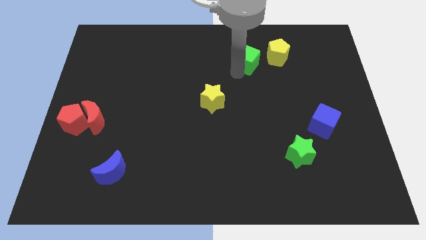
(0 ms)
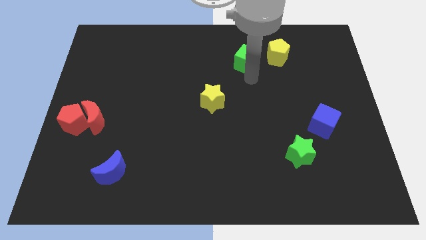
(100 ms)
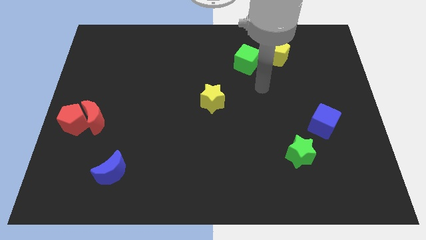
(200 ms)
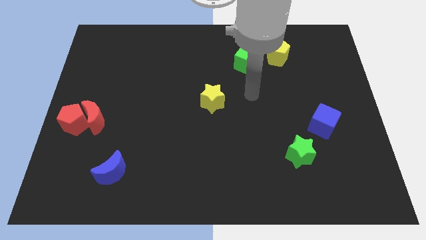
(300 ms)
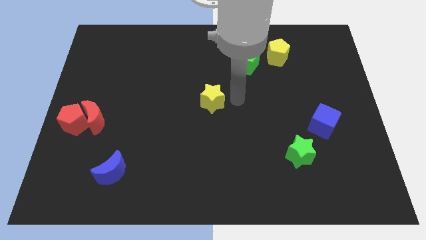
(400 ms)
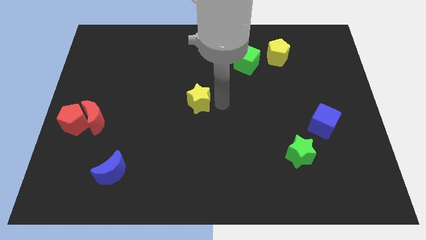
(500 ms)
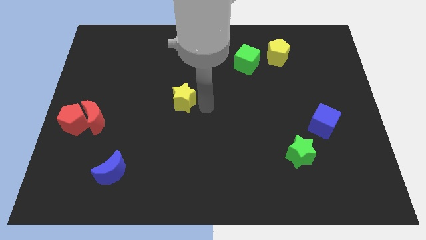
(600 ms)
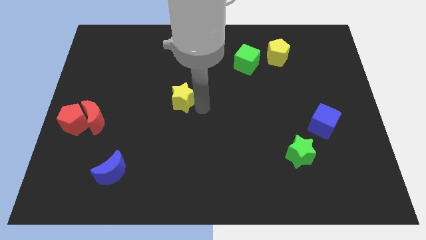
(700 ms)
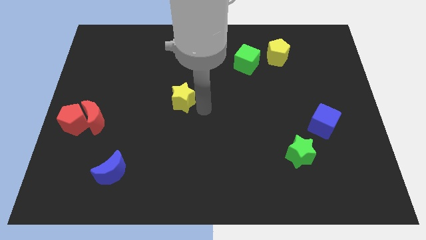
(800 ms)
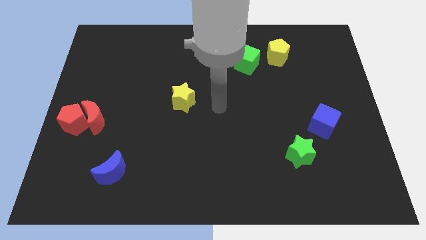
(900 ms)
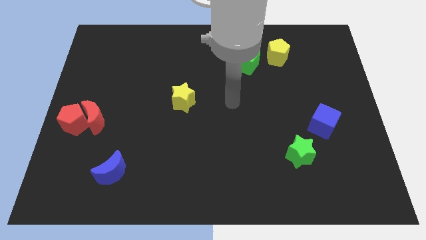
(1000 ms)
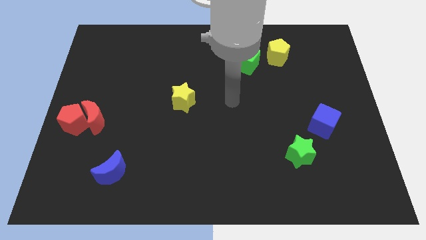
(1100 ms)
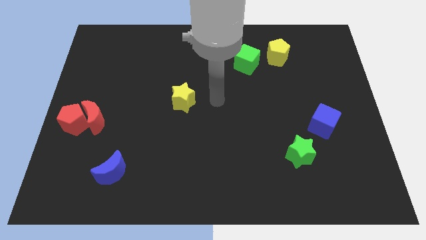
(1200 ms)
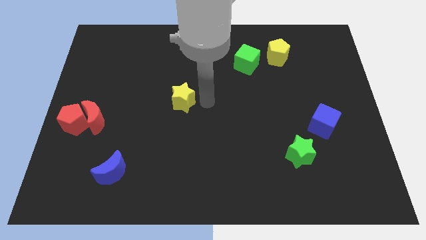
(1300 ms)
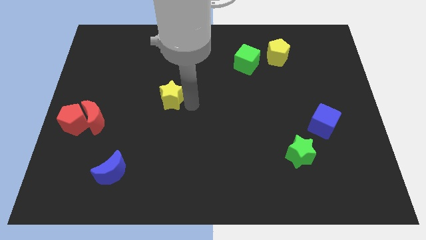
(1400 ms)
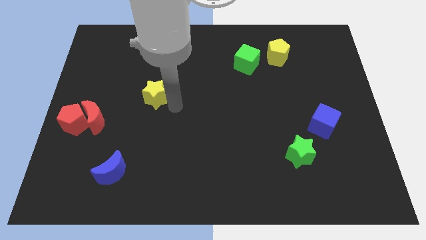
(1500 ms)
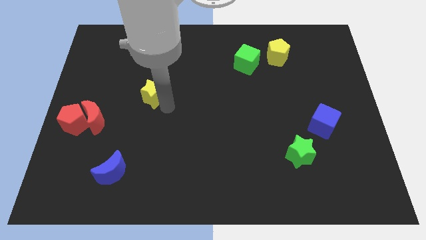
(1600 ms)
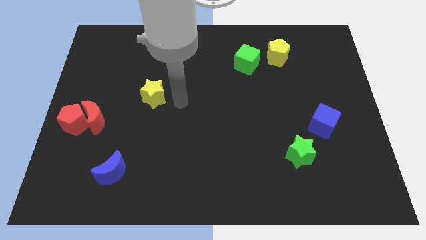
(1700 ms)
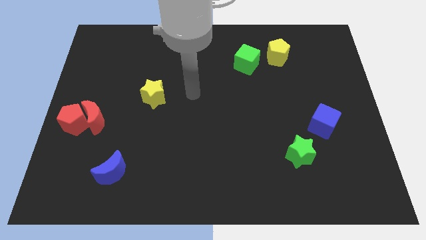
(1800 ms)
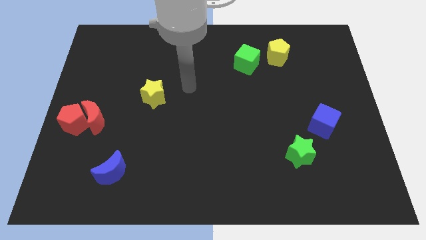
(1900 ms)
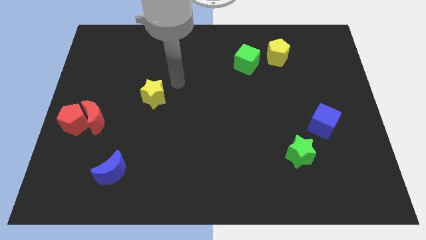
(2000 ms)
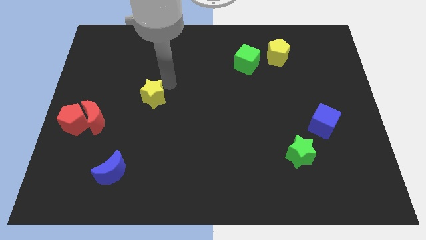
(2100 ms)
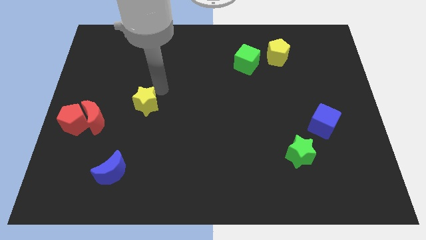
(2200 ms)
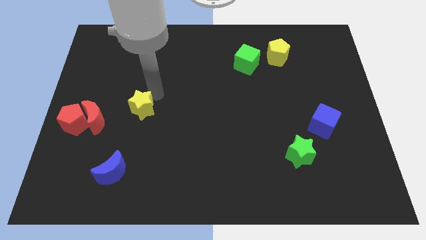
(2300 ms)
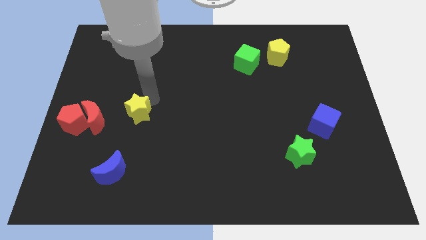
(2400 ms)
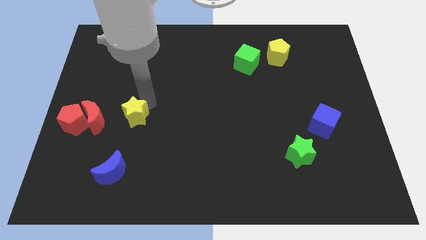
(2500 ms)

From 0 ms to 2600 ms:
move the yellow star right to the red crescent

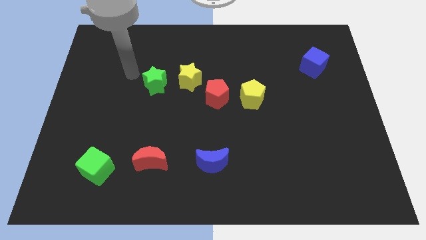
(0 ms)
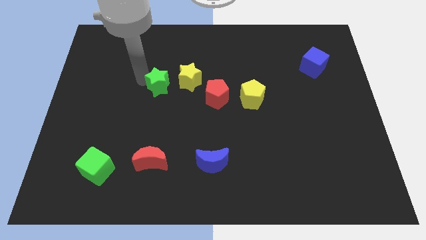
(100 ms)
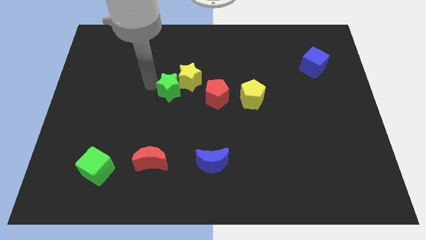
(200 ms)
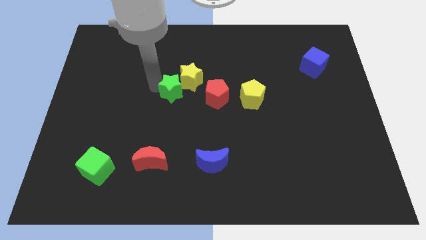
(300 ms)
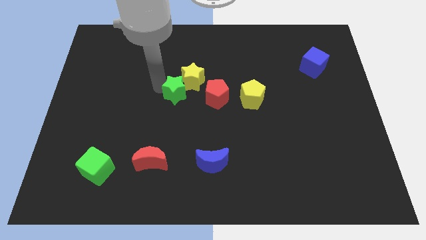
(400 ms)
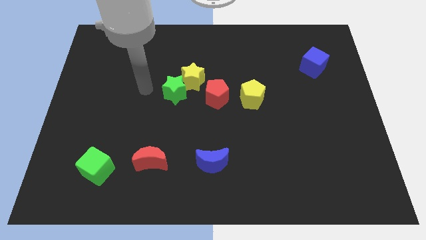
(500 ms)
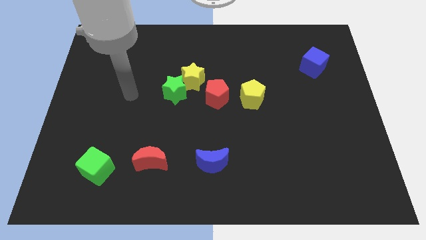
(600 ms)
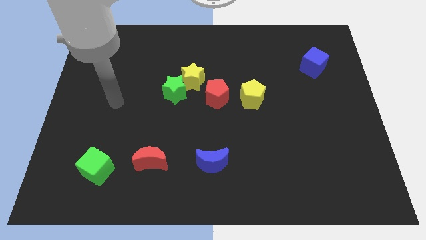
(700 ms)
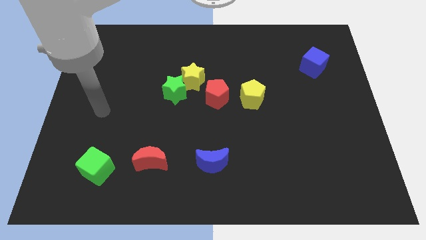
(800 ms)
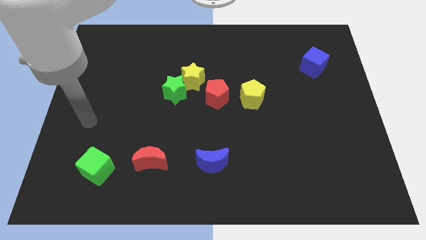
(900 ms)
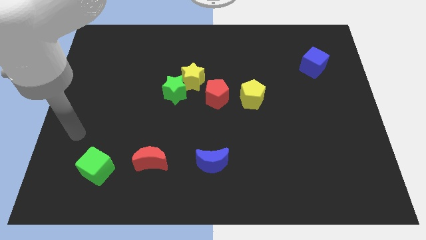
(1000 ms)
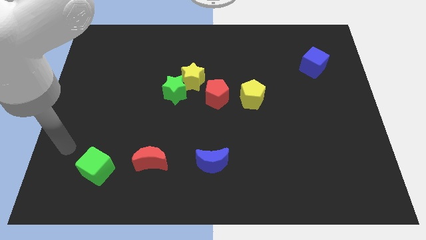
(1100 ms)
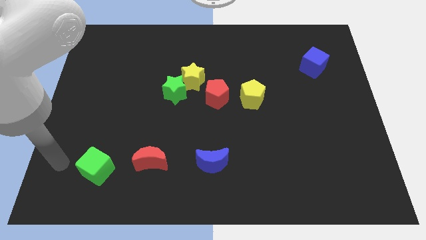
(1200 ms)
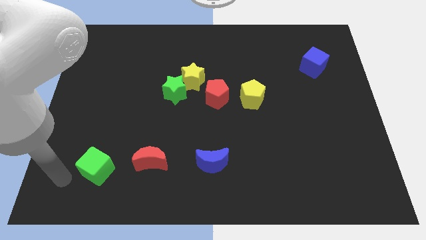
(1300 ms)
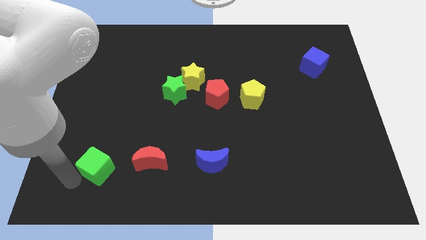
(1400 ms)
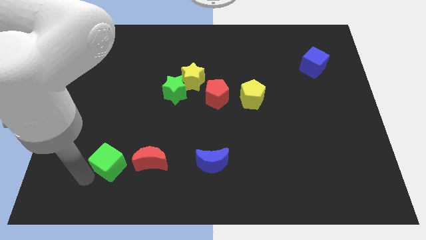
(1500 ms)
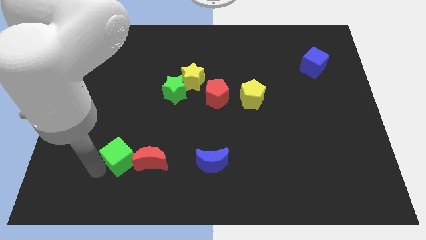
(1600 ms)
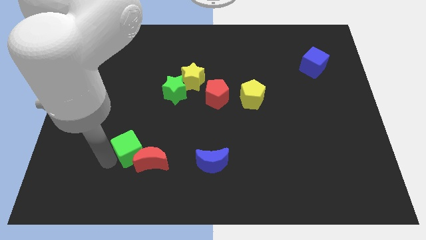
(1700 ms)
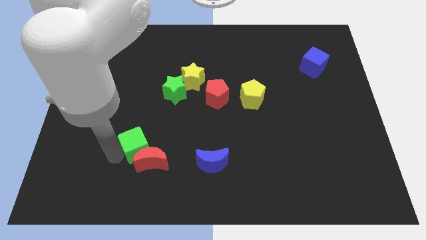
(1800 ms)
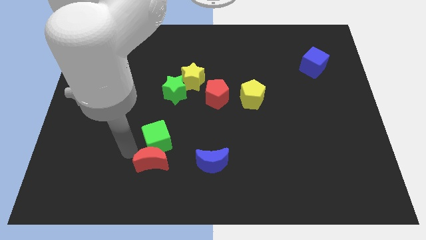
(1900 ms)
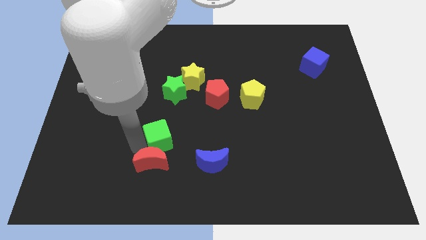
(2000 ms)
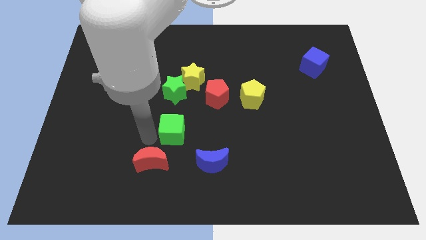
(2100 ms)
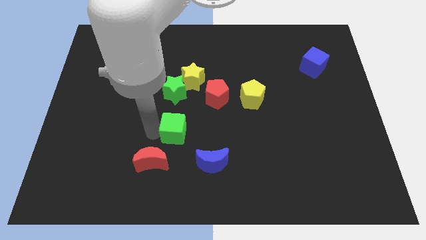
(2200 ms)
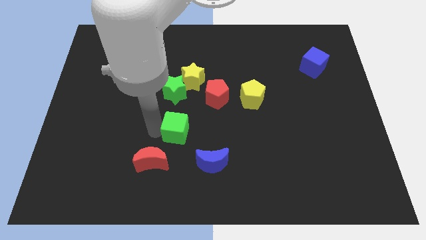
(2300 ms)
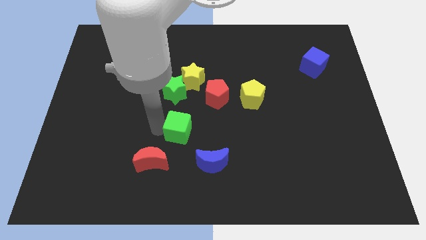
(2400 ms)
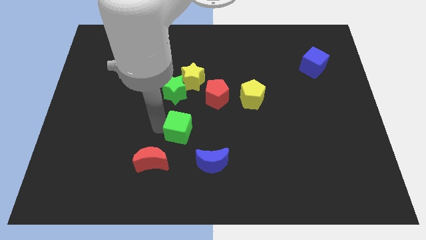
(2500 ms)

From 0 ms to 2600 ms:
place the green cube below the green star

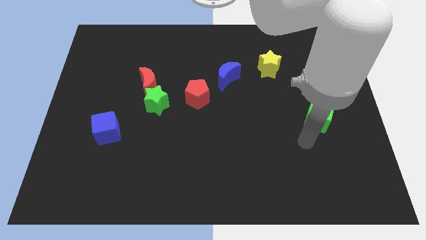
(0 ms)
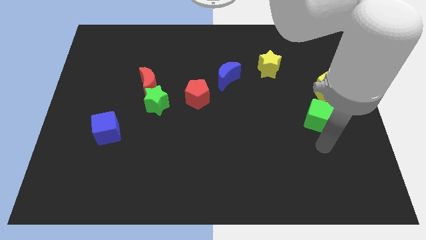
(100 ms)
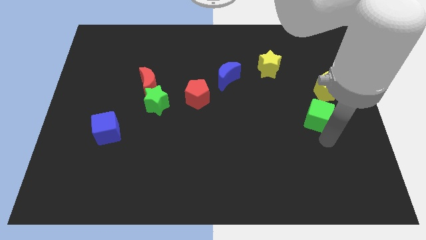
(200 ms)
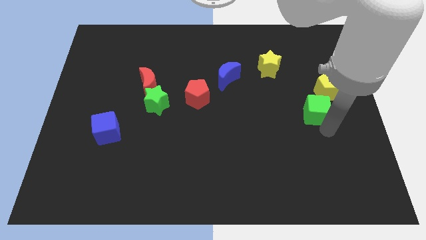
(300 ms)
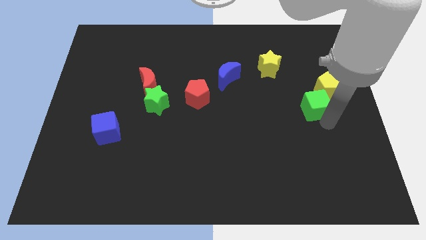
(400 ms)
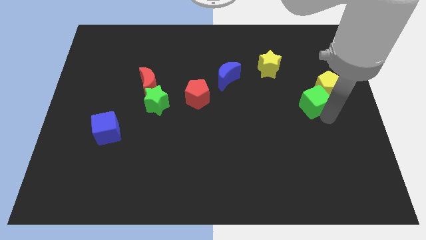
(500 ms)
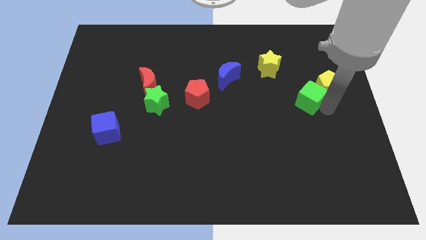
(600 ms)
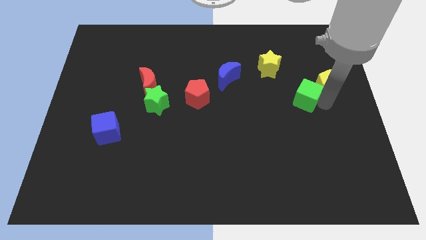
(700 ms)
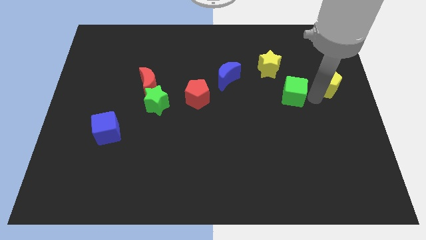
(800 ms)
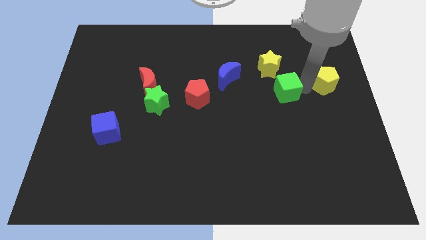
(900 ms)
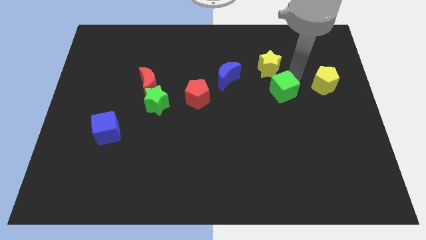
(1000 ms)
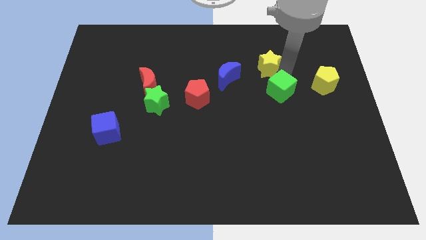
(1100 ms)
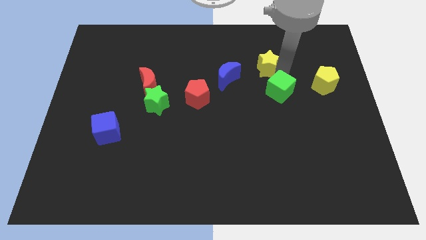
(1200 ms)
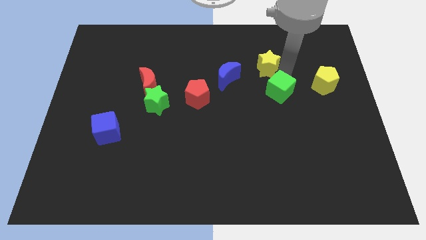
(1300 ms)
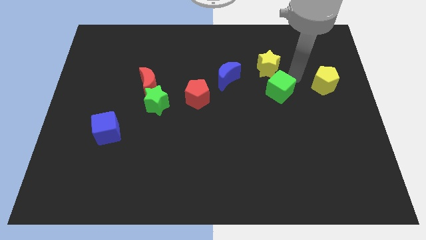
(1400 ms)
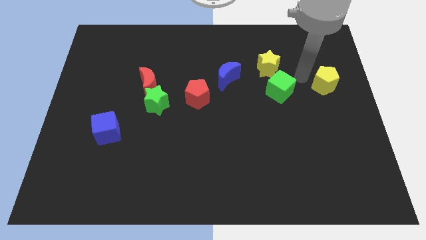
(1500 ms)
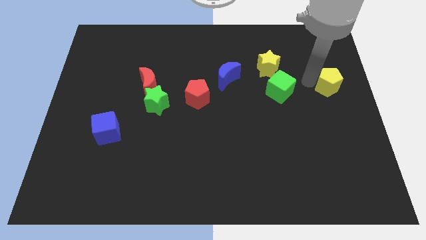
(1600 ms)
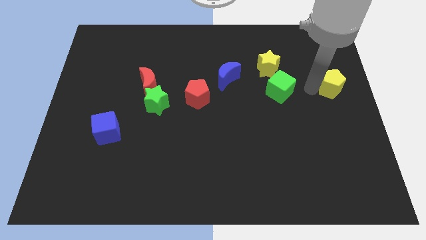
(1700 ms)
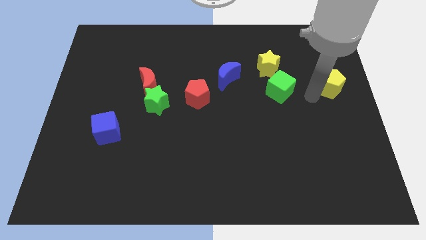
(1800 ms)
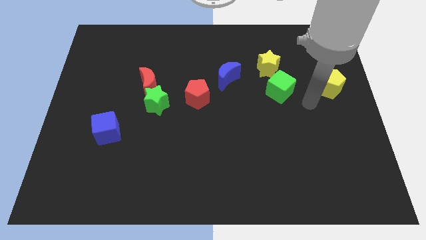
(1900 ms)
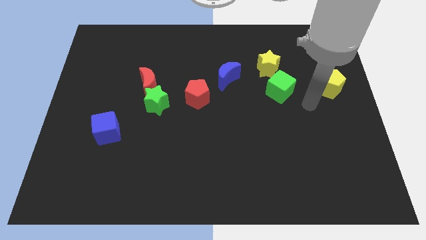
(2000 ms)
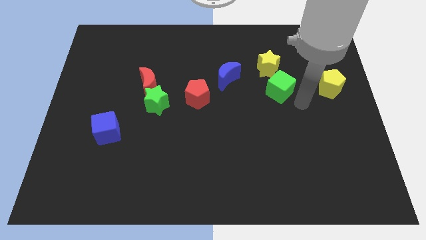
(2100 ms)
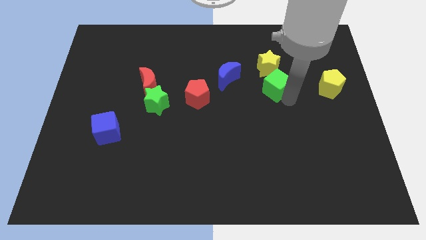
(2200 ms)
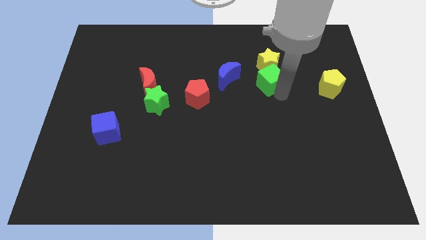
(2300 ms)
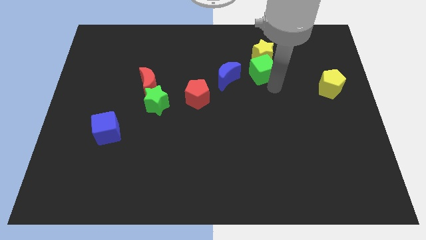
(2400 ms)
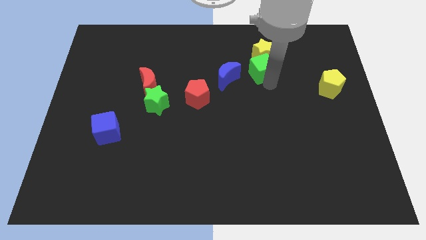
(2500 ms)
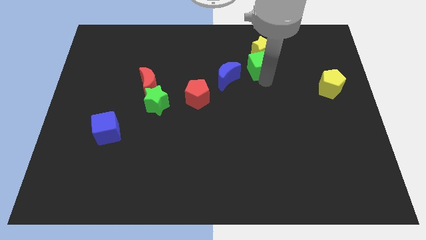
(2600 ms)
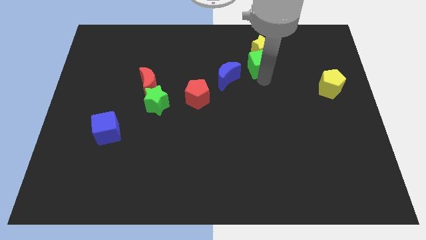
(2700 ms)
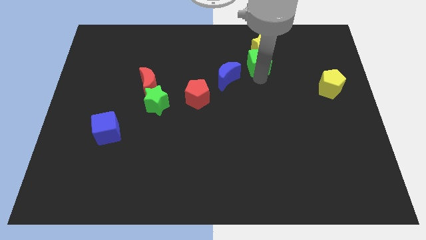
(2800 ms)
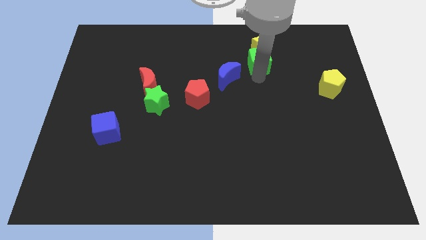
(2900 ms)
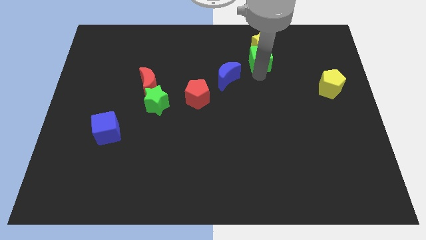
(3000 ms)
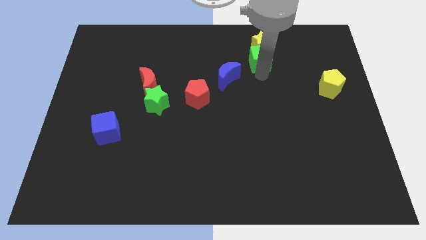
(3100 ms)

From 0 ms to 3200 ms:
push the green cube into the yellow star

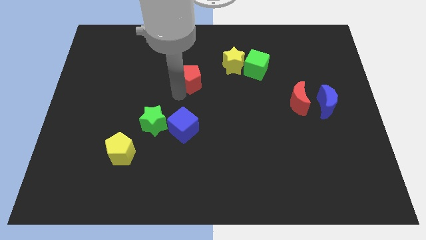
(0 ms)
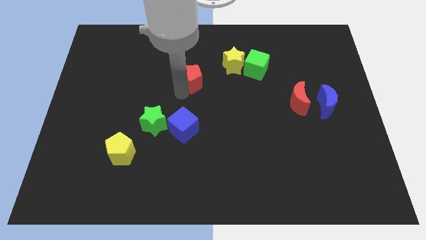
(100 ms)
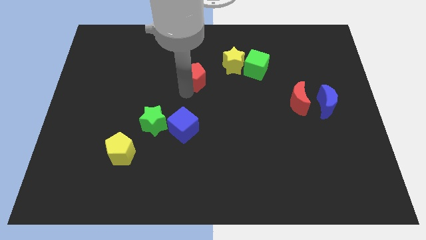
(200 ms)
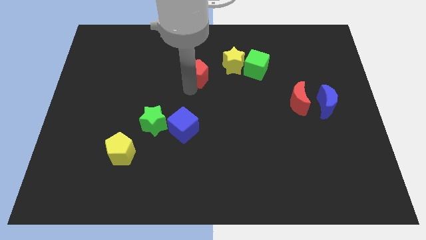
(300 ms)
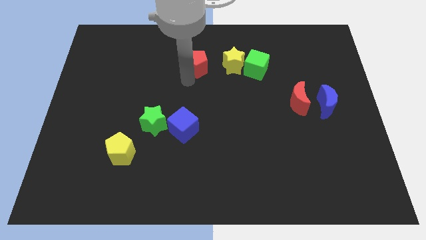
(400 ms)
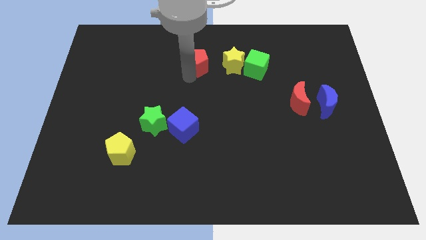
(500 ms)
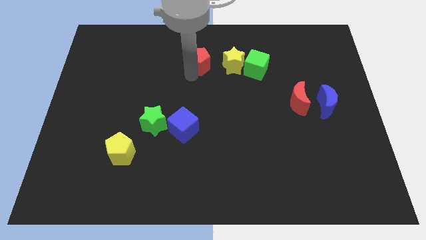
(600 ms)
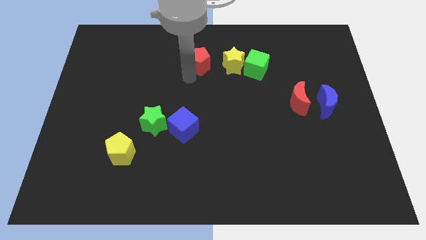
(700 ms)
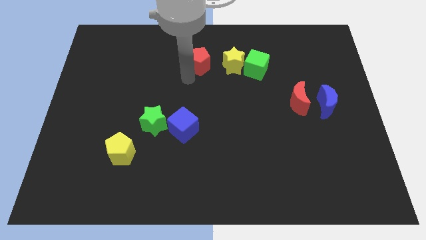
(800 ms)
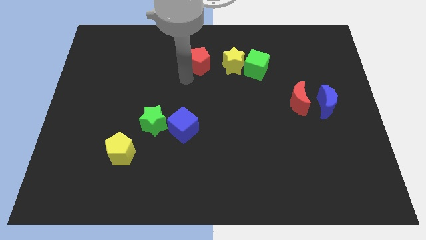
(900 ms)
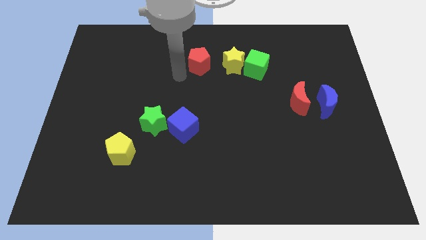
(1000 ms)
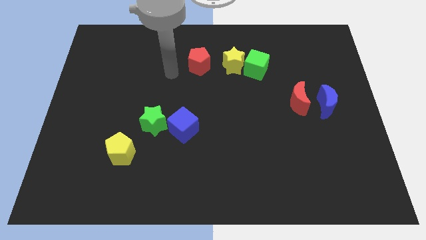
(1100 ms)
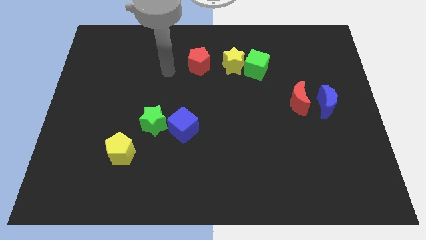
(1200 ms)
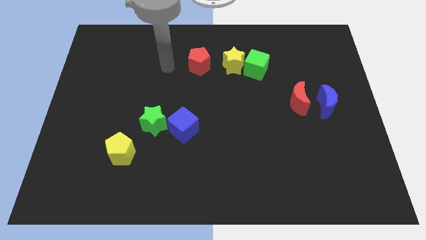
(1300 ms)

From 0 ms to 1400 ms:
place red pentagon to the left of the yellow star
